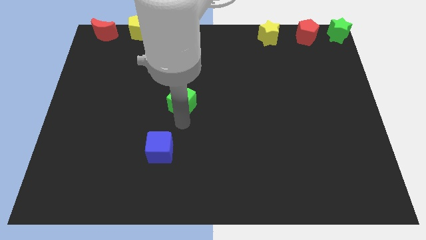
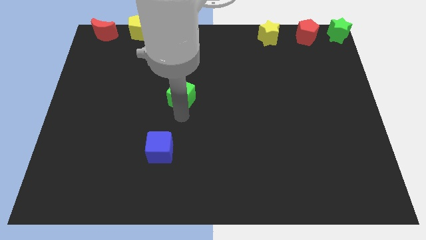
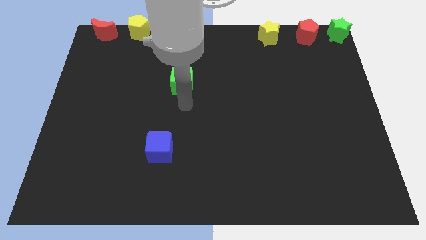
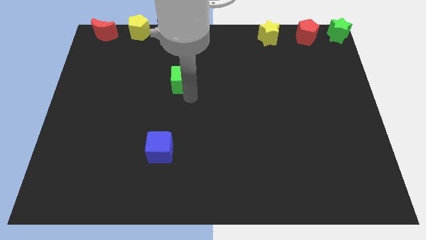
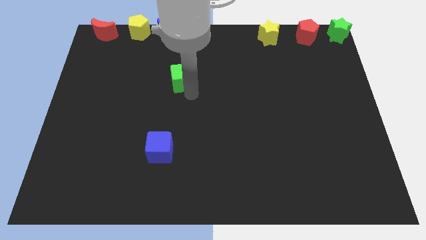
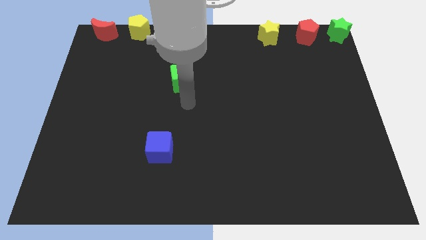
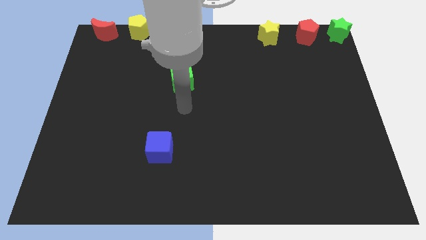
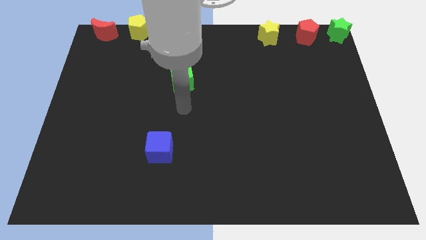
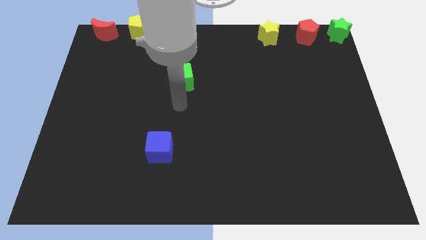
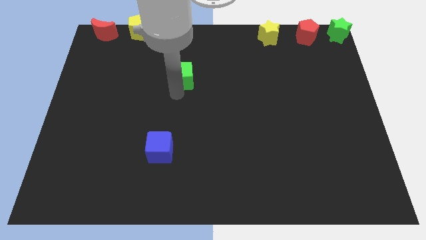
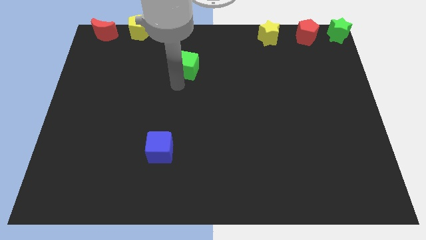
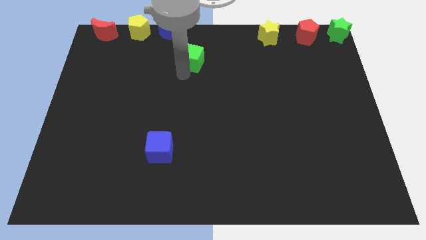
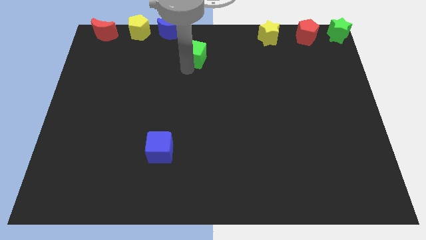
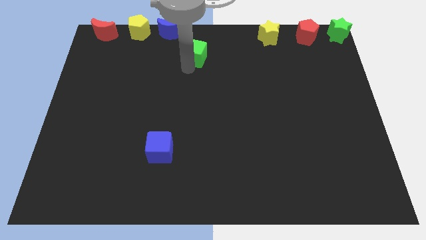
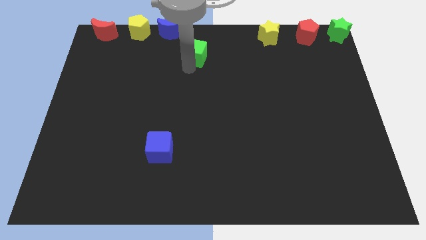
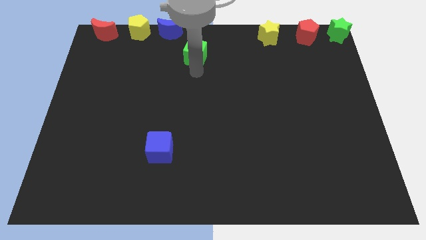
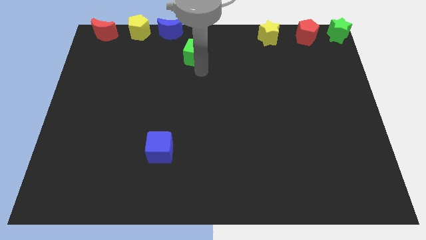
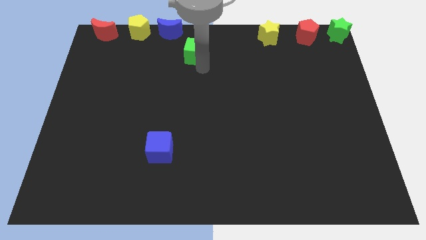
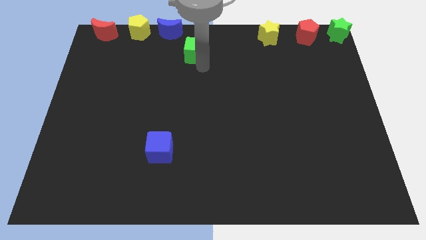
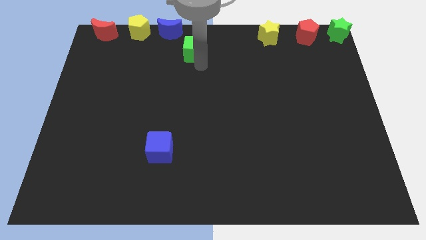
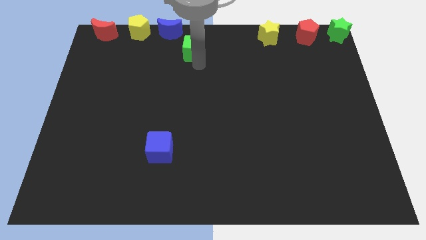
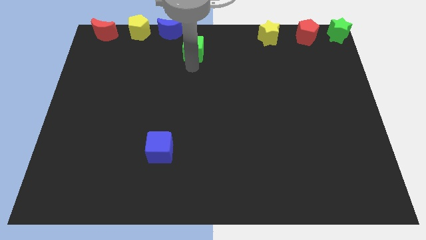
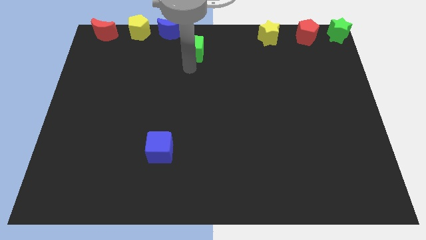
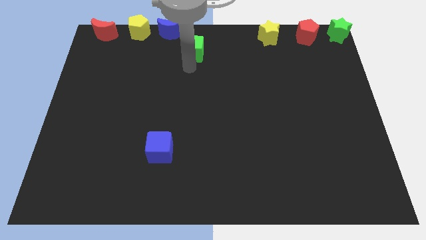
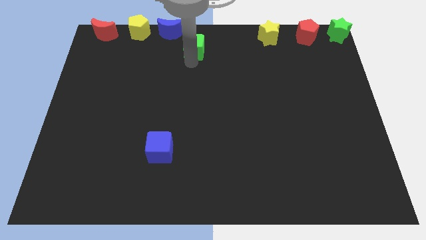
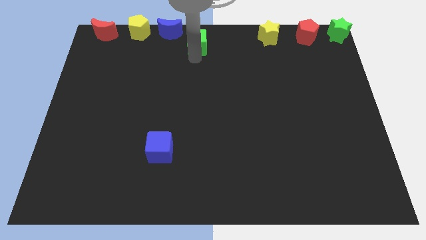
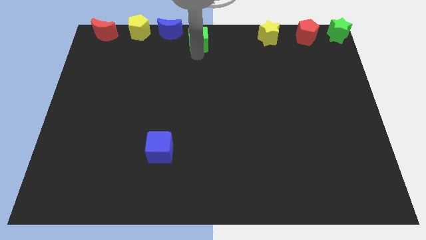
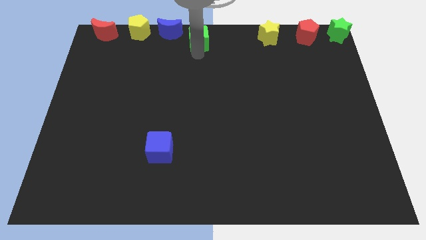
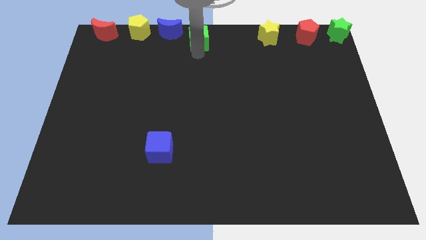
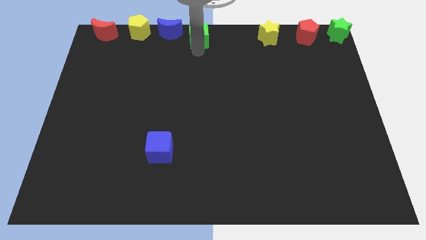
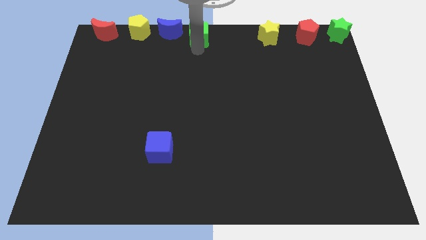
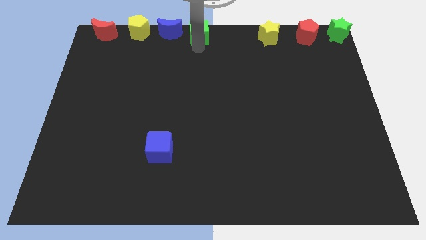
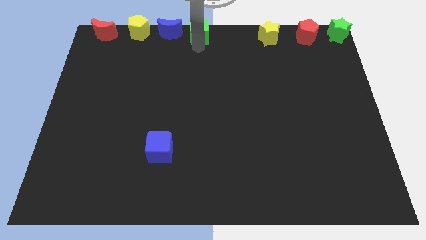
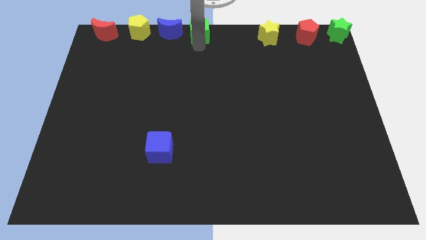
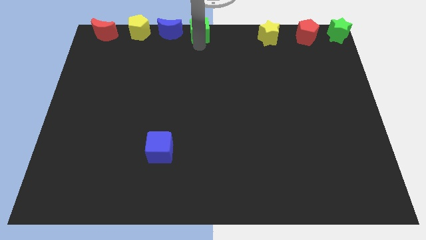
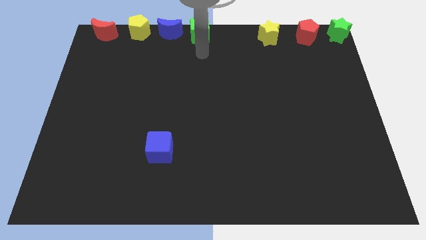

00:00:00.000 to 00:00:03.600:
place the green cube to the right side of the blue moon

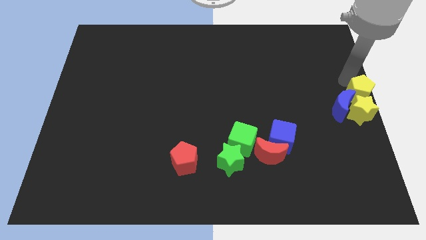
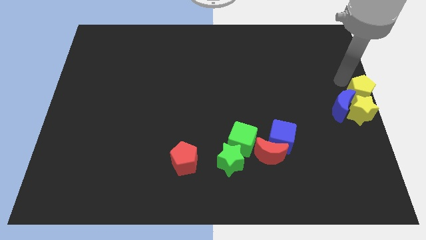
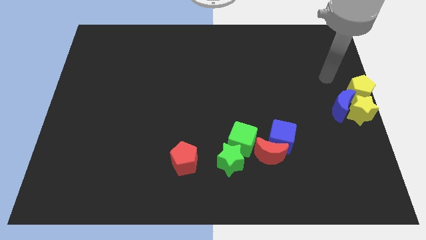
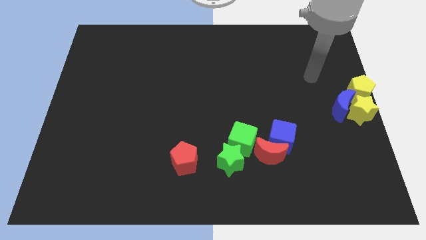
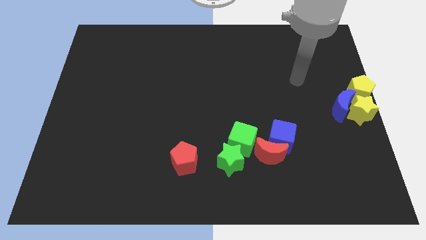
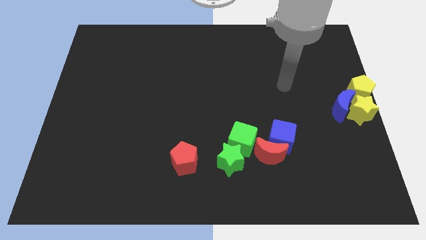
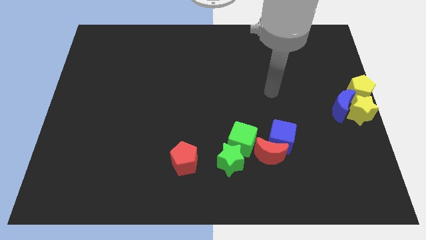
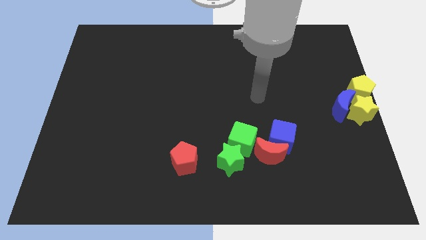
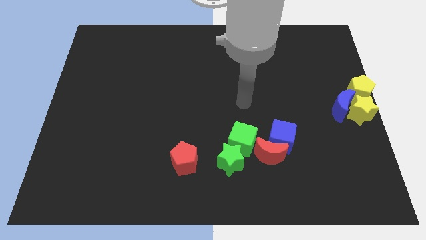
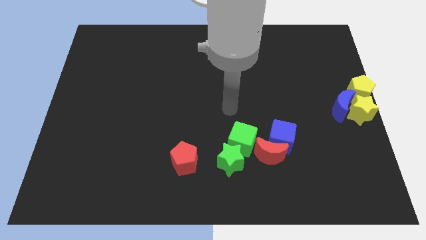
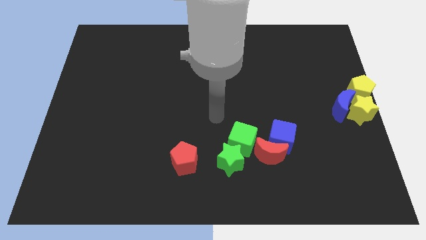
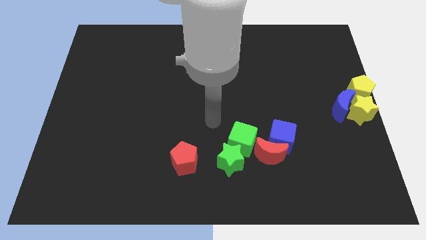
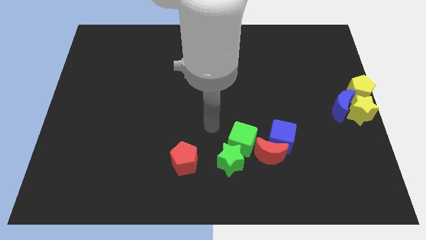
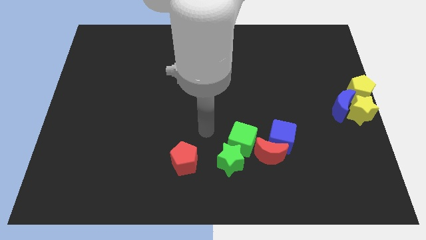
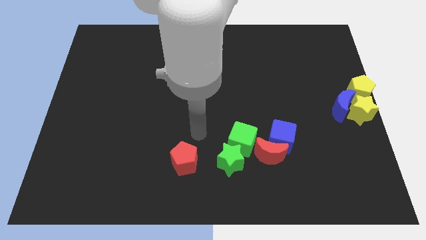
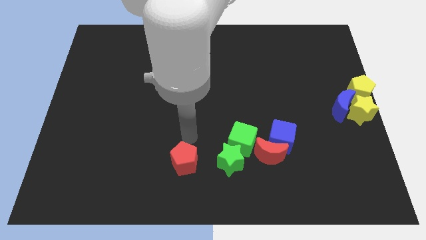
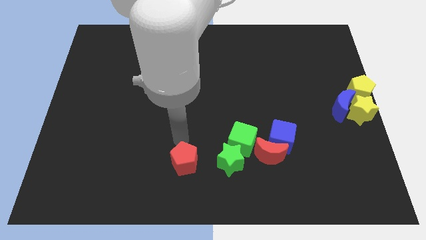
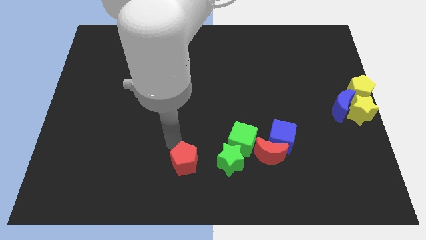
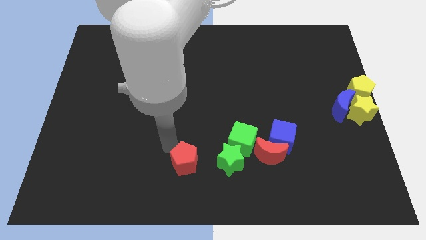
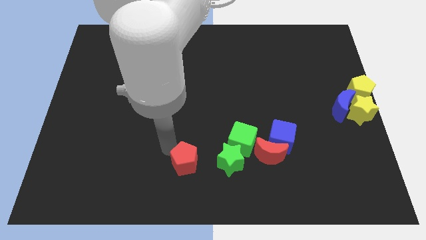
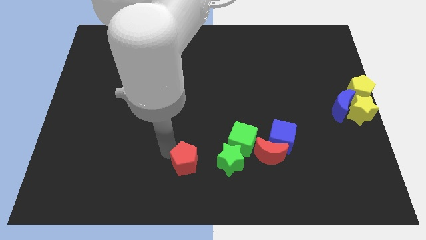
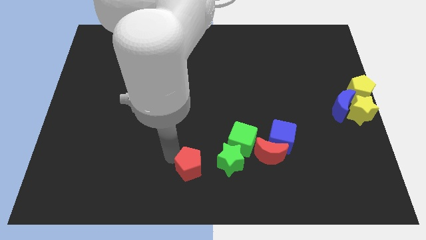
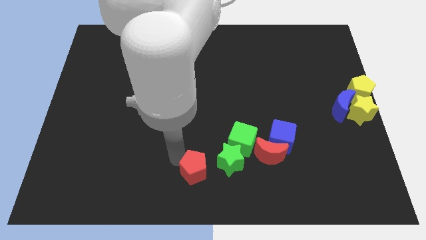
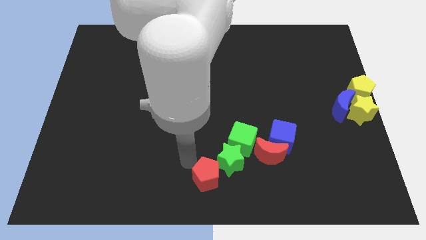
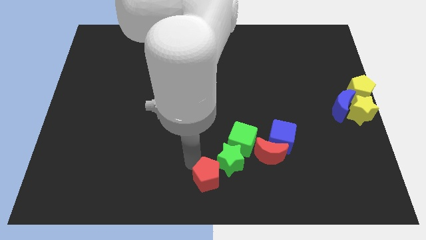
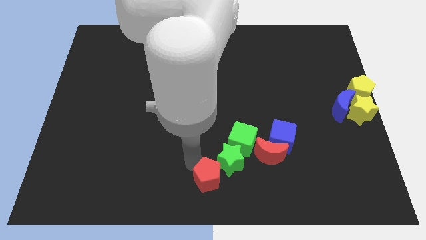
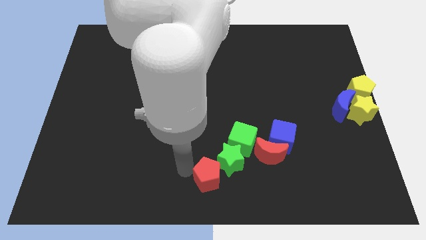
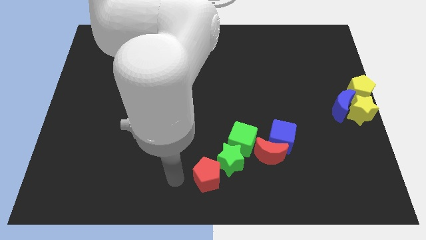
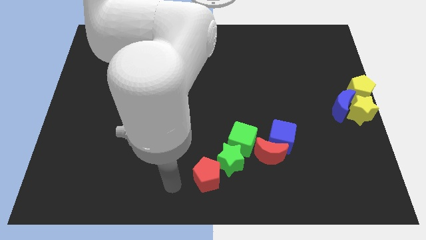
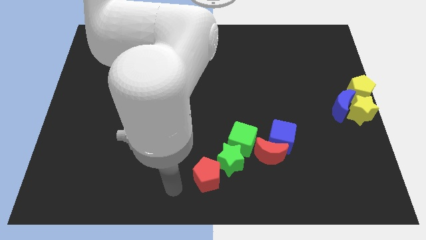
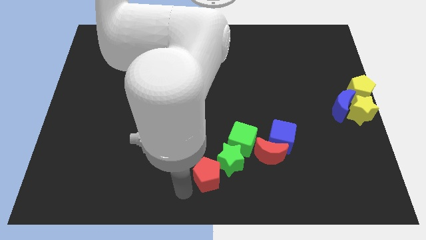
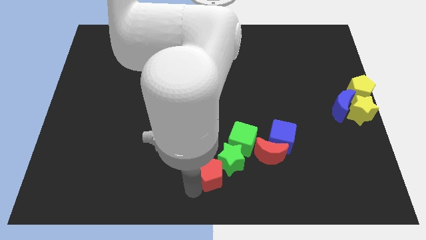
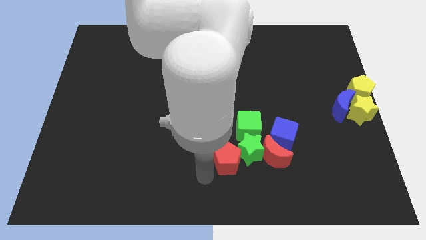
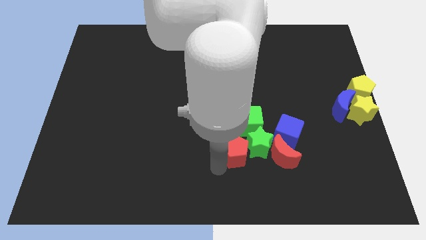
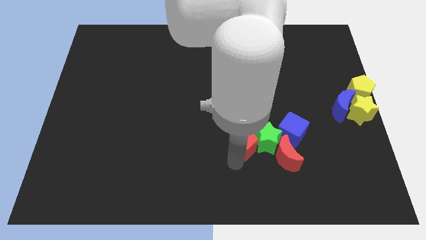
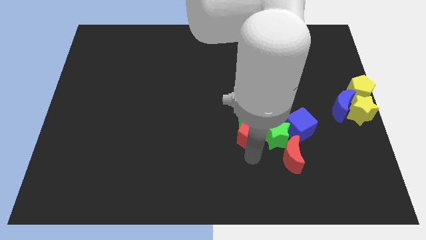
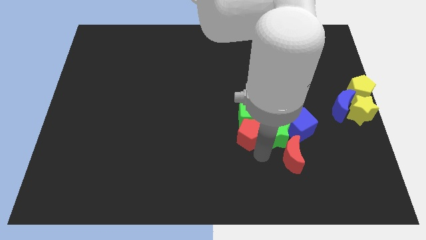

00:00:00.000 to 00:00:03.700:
slide the red pentagon into the group of blocks

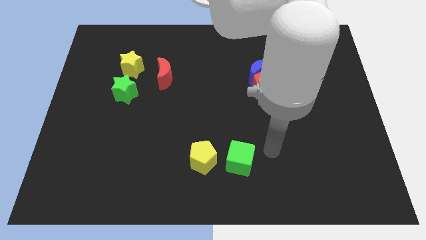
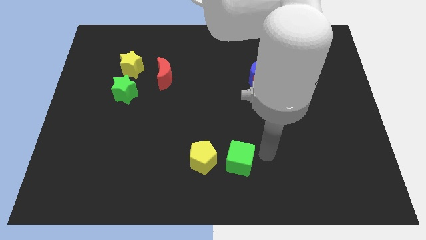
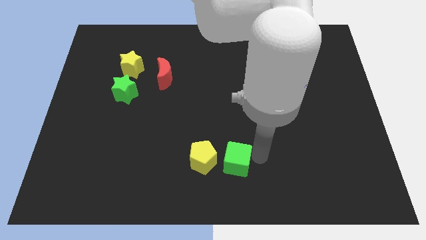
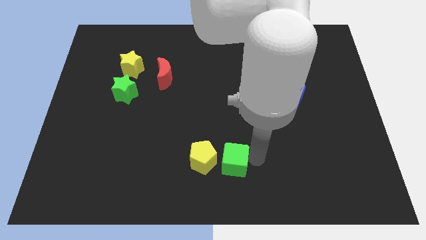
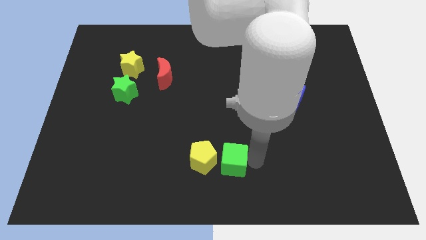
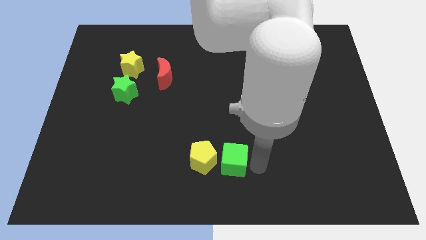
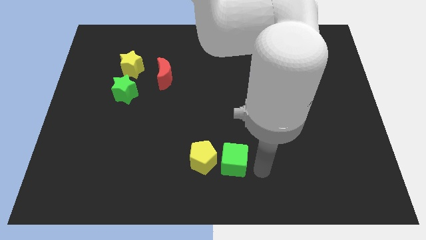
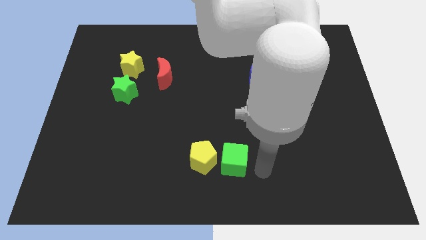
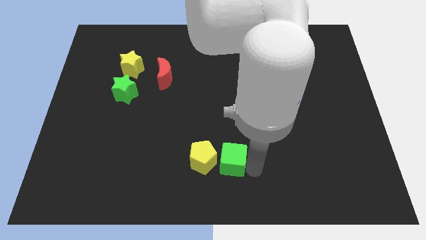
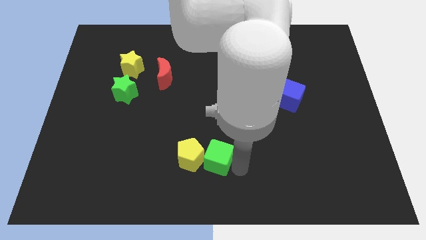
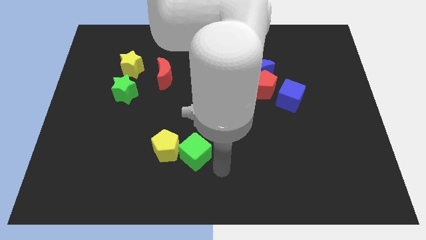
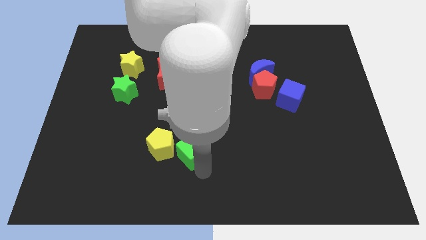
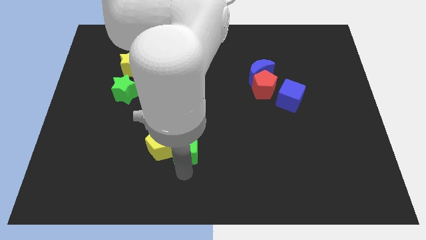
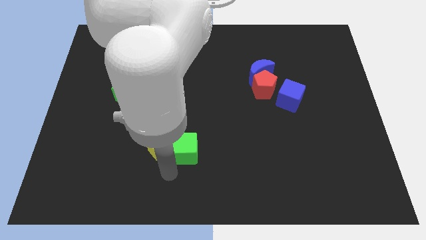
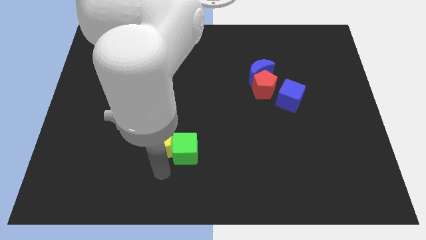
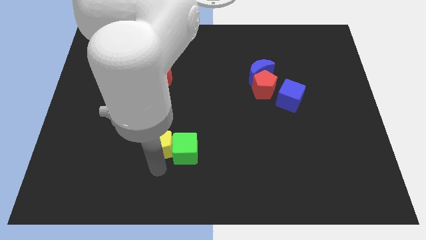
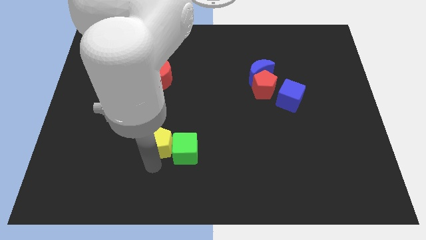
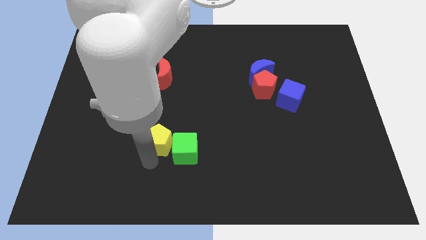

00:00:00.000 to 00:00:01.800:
move the green cube to the left of the yellow pentagon
